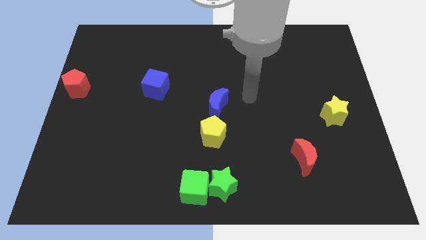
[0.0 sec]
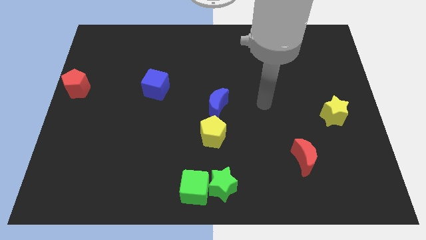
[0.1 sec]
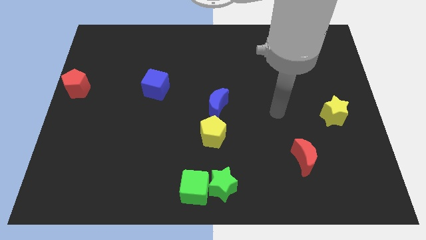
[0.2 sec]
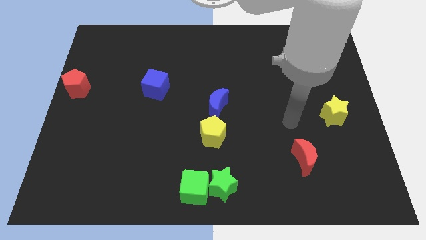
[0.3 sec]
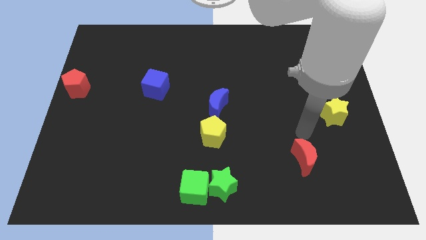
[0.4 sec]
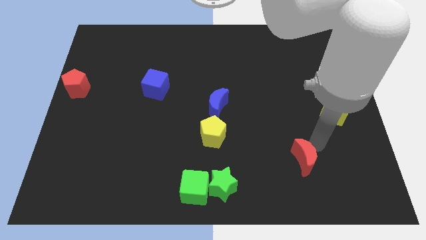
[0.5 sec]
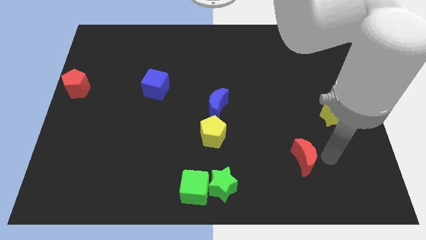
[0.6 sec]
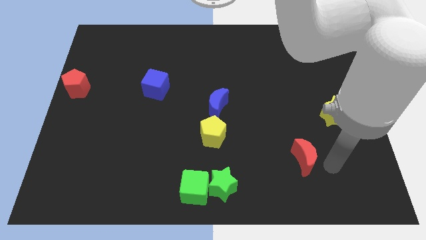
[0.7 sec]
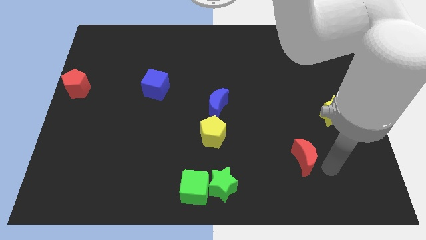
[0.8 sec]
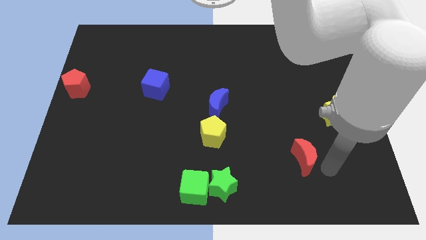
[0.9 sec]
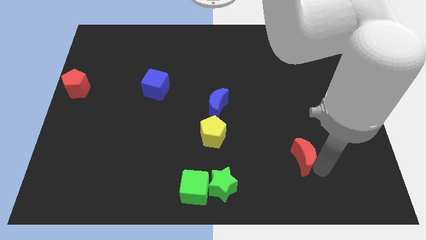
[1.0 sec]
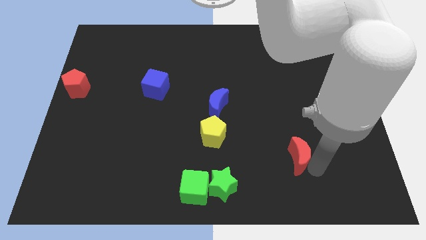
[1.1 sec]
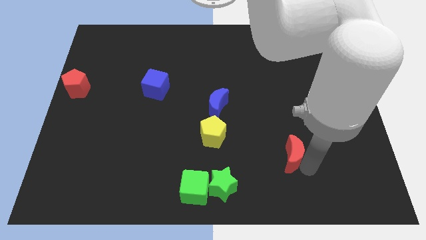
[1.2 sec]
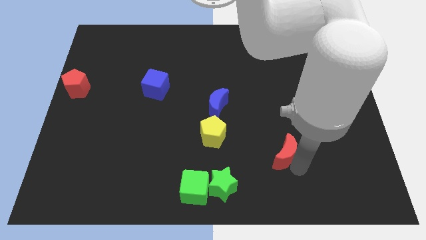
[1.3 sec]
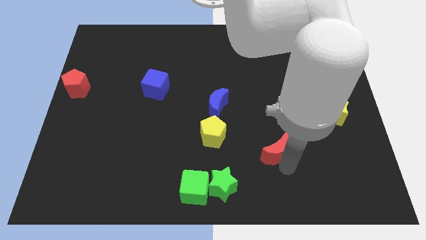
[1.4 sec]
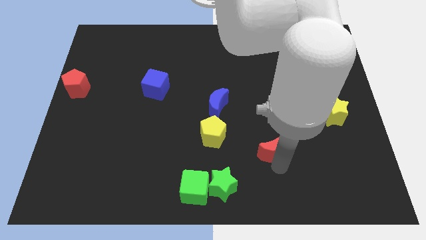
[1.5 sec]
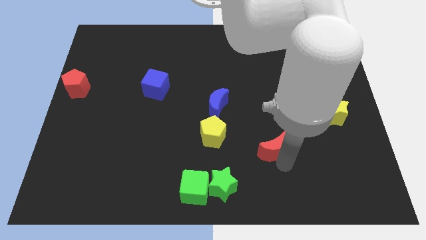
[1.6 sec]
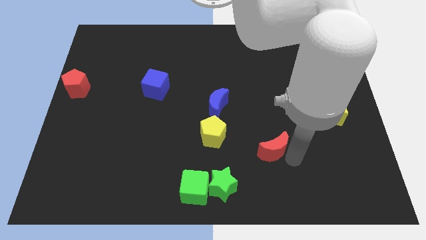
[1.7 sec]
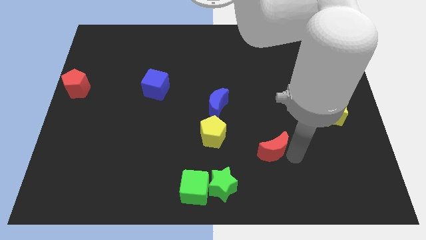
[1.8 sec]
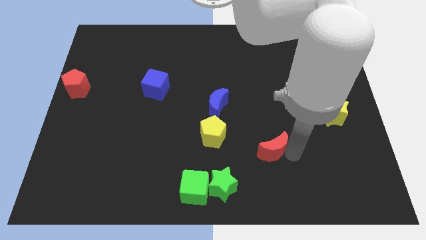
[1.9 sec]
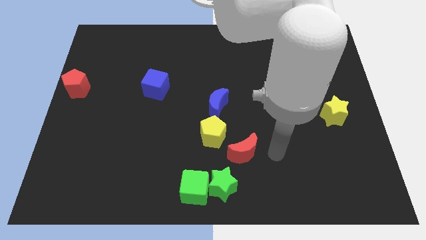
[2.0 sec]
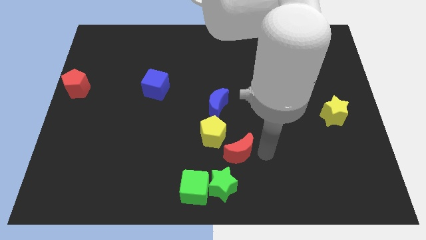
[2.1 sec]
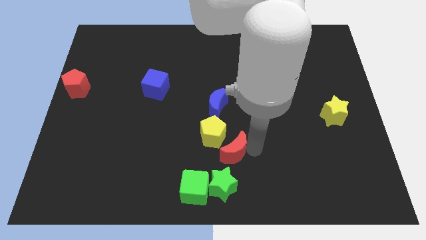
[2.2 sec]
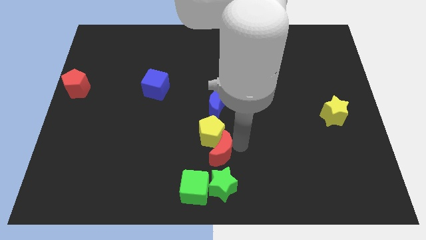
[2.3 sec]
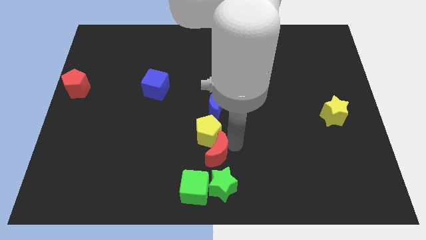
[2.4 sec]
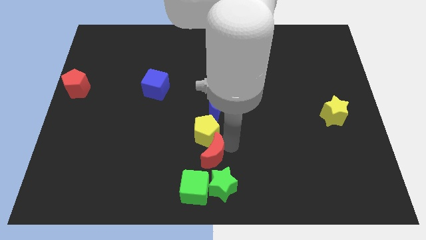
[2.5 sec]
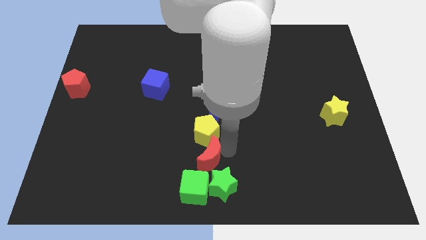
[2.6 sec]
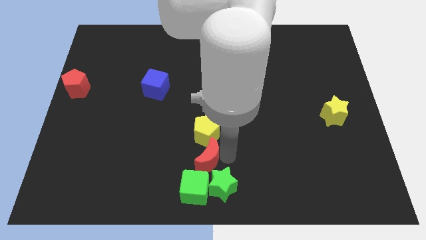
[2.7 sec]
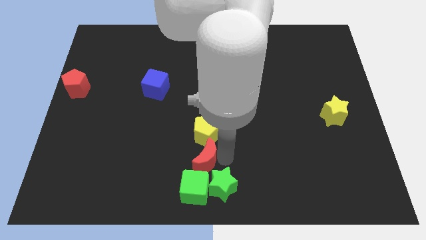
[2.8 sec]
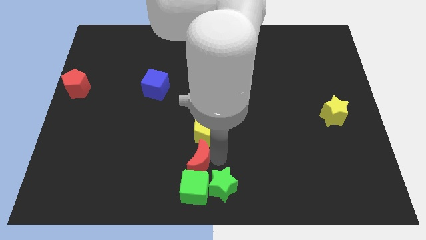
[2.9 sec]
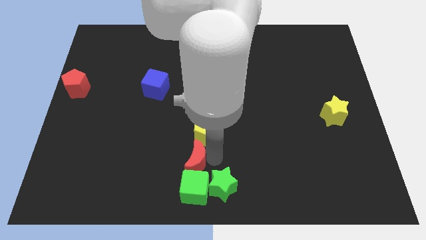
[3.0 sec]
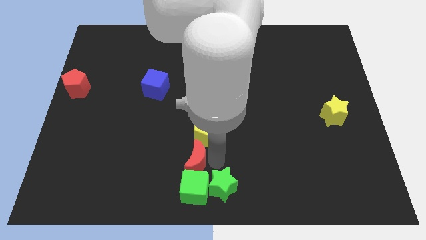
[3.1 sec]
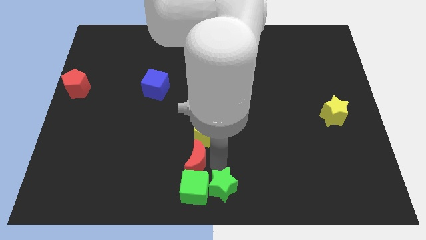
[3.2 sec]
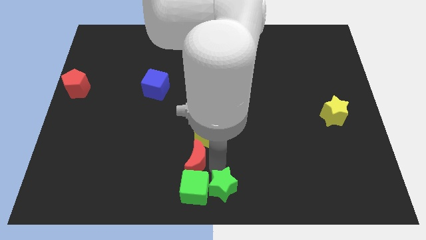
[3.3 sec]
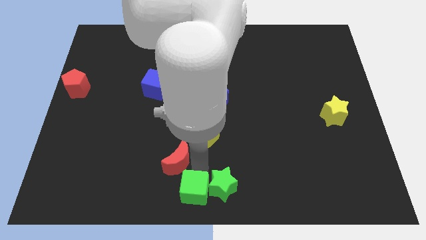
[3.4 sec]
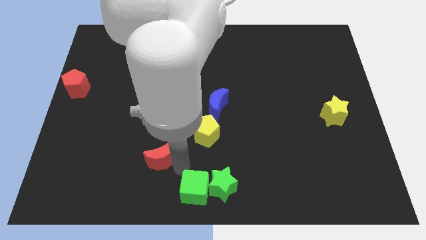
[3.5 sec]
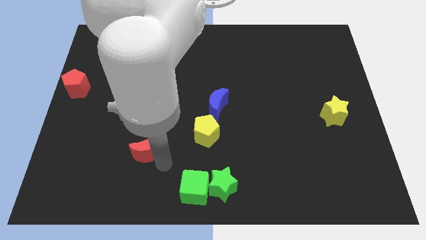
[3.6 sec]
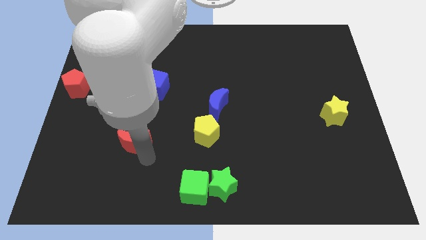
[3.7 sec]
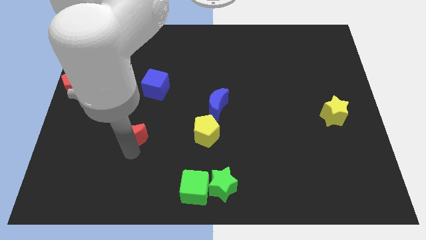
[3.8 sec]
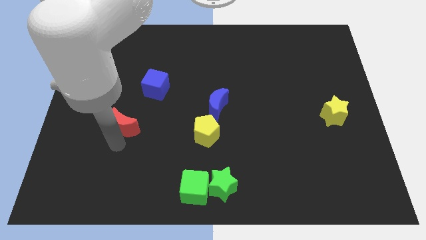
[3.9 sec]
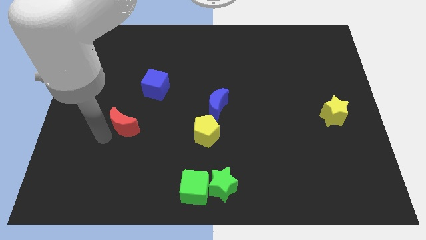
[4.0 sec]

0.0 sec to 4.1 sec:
place the red moon parallel to the yellow pentagon

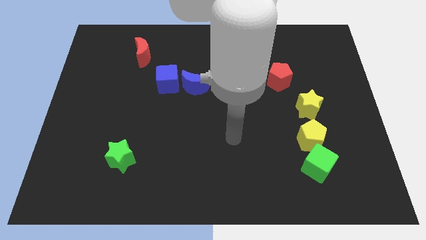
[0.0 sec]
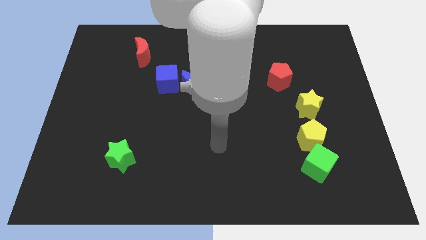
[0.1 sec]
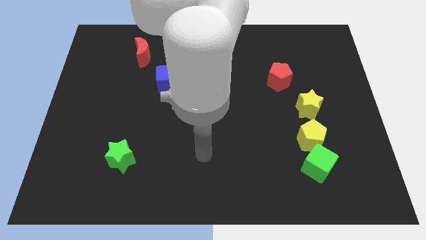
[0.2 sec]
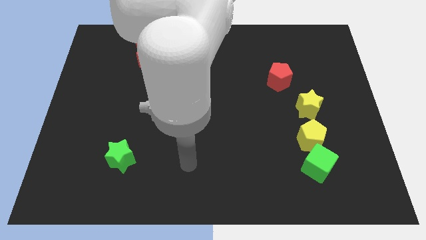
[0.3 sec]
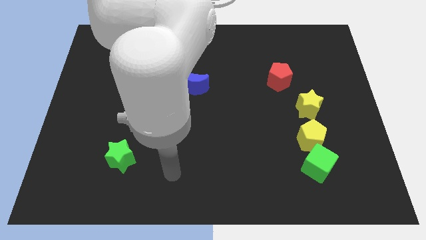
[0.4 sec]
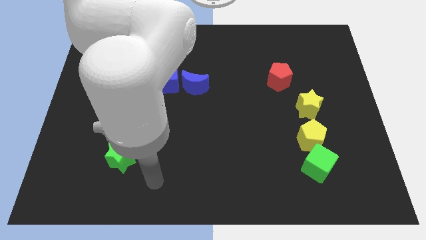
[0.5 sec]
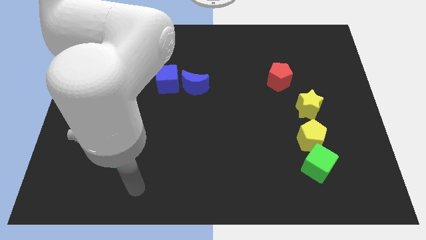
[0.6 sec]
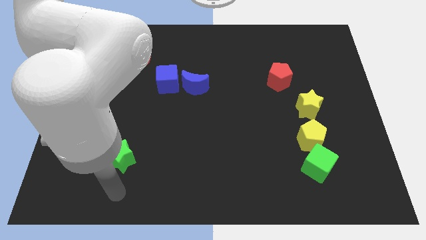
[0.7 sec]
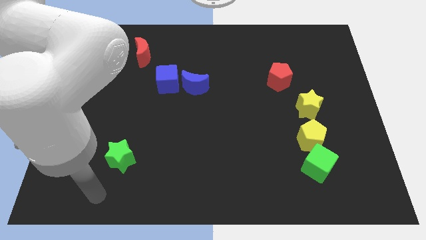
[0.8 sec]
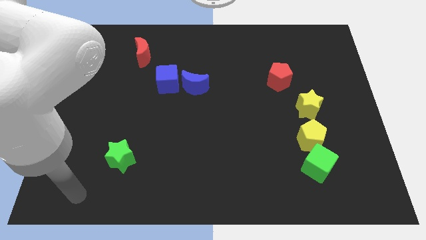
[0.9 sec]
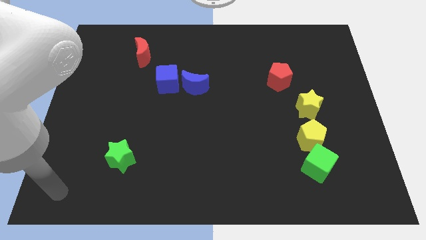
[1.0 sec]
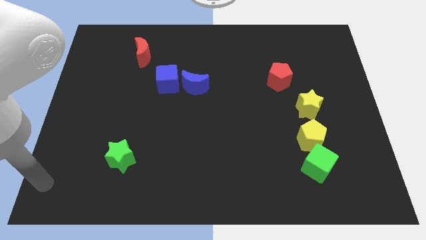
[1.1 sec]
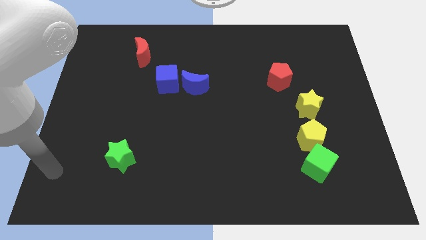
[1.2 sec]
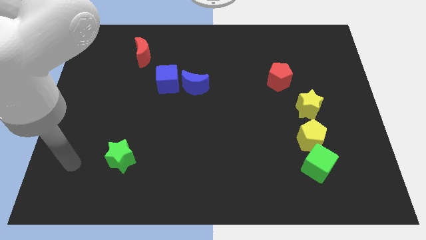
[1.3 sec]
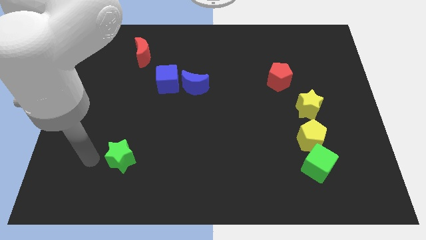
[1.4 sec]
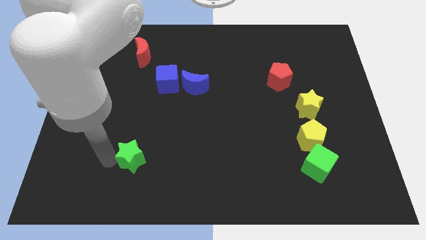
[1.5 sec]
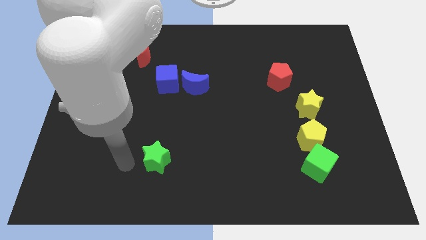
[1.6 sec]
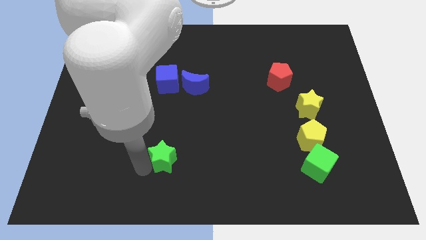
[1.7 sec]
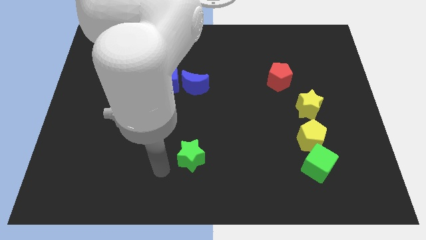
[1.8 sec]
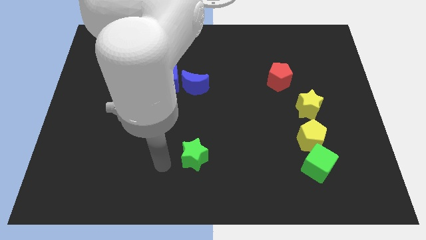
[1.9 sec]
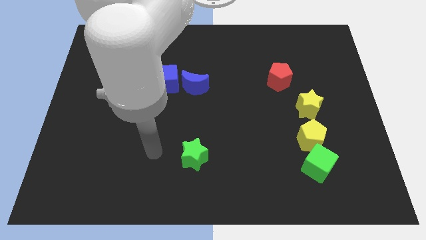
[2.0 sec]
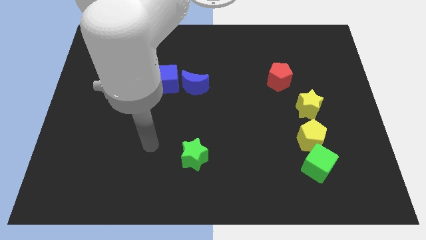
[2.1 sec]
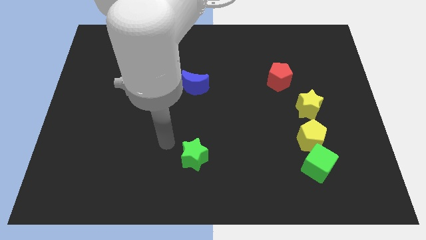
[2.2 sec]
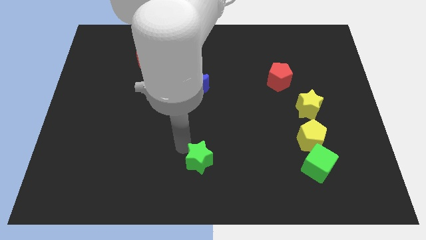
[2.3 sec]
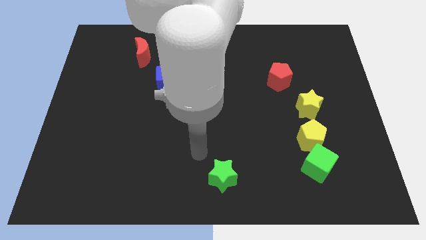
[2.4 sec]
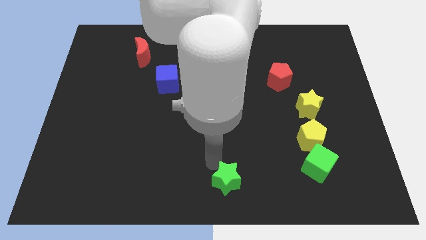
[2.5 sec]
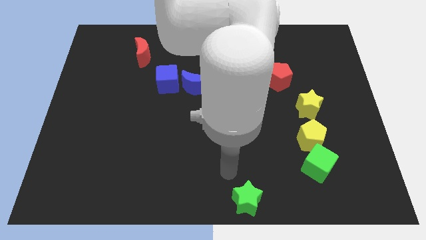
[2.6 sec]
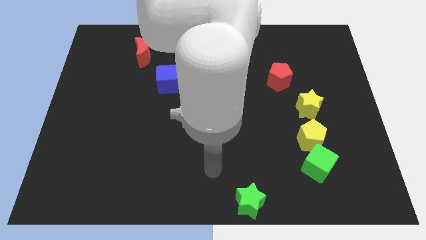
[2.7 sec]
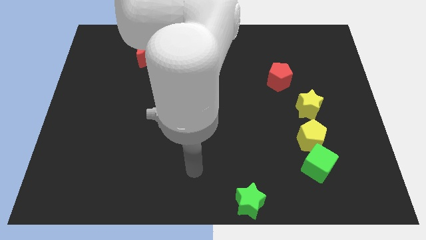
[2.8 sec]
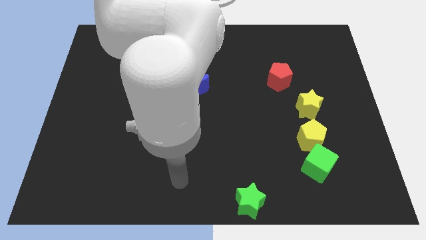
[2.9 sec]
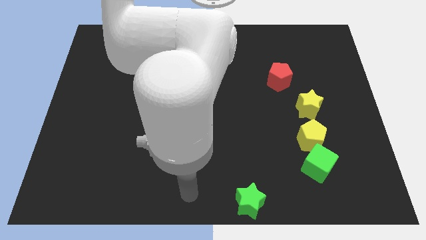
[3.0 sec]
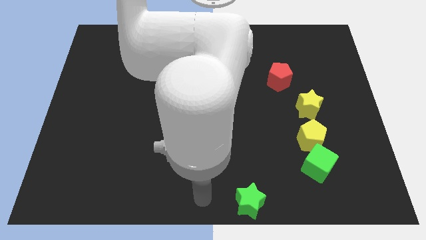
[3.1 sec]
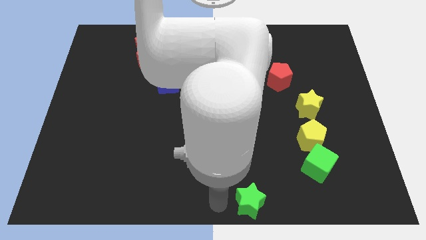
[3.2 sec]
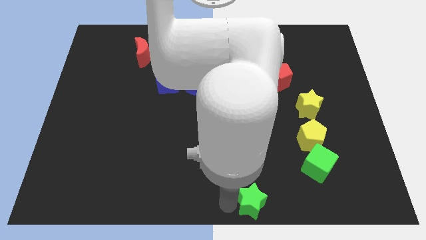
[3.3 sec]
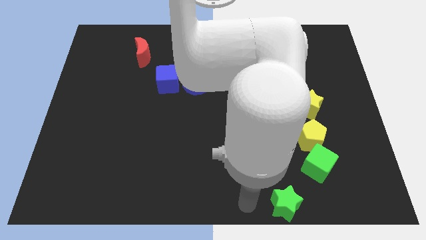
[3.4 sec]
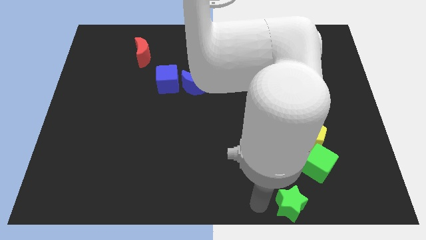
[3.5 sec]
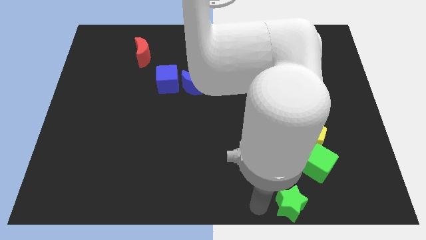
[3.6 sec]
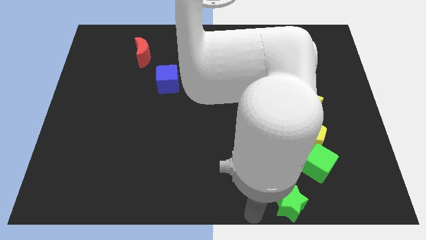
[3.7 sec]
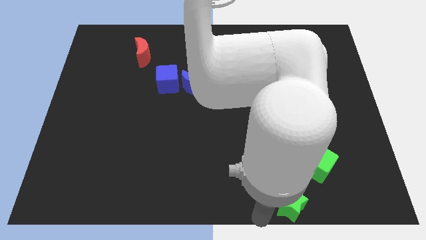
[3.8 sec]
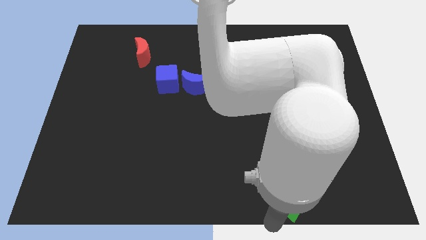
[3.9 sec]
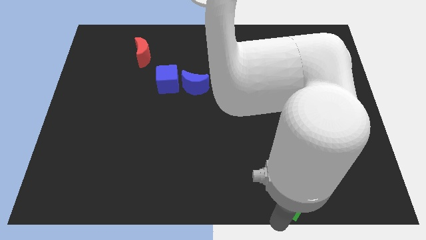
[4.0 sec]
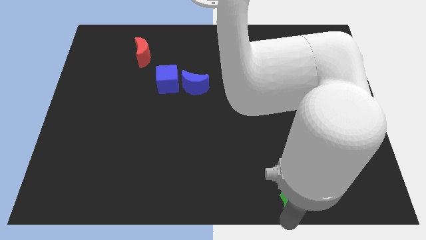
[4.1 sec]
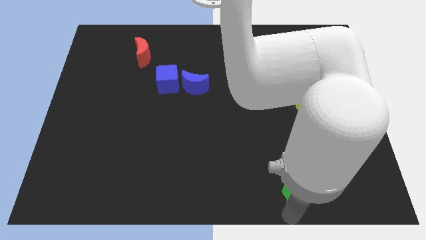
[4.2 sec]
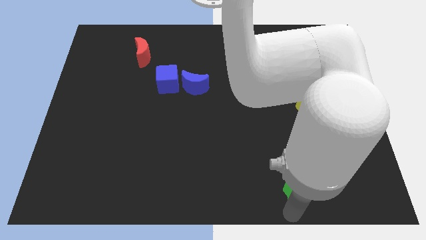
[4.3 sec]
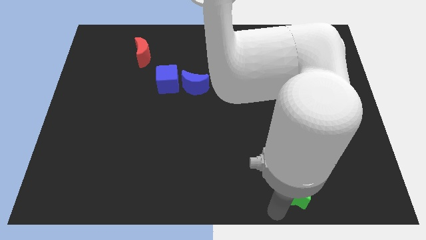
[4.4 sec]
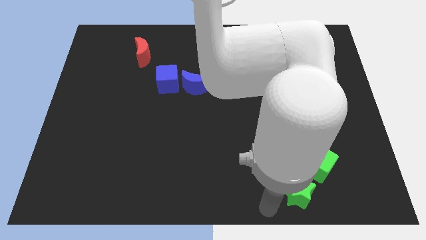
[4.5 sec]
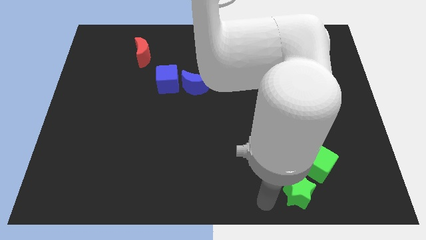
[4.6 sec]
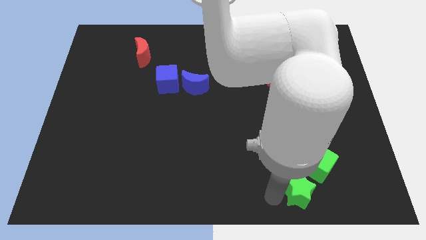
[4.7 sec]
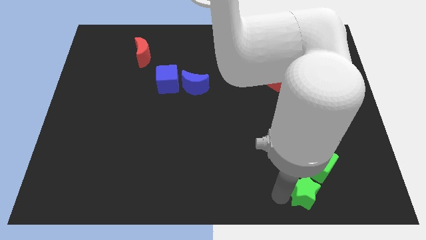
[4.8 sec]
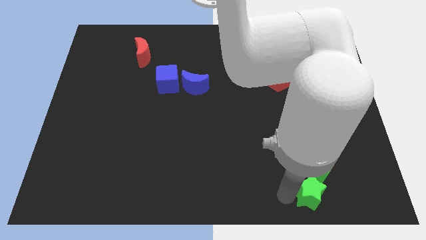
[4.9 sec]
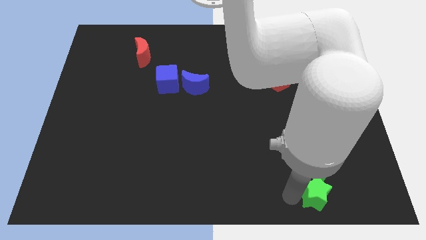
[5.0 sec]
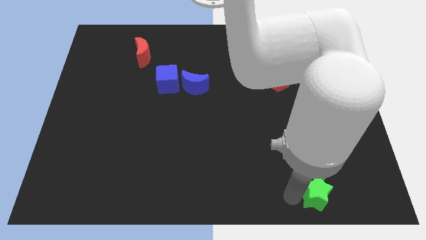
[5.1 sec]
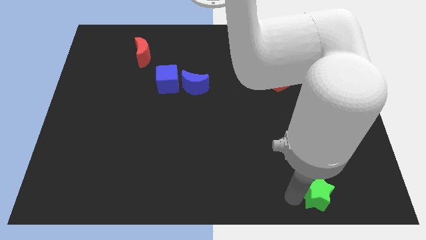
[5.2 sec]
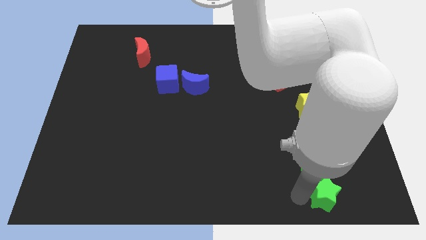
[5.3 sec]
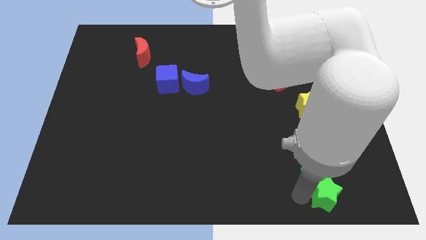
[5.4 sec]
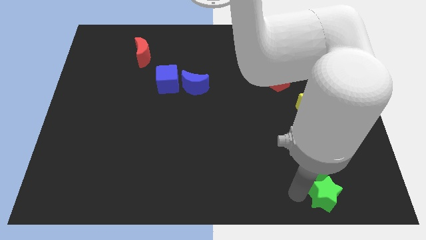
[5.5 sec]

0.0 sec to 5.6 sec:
place the green star at the bottom of the green cube
